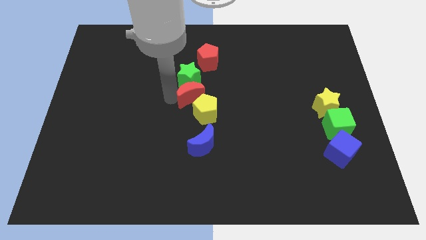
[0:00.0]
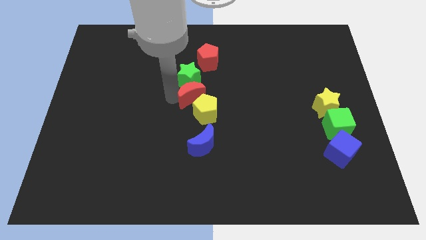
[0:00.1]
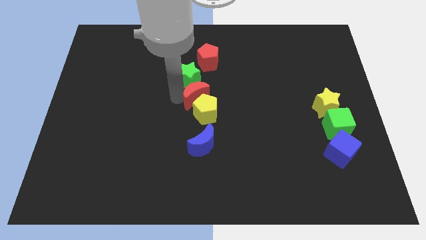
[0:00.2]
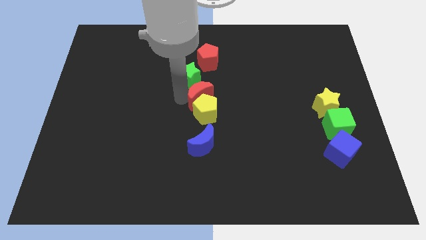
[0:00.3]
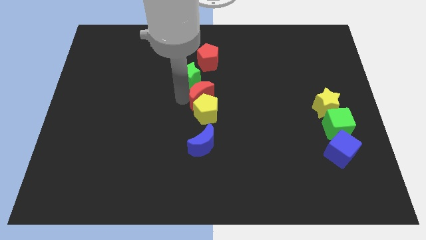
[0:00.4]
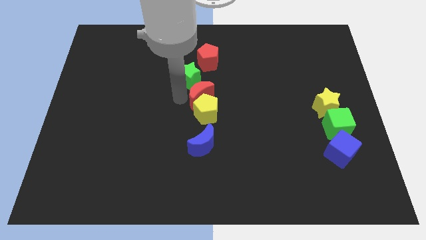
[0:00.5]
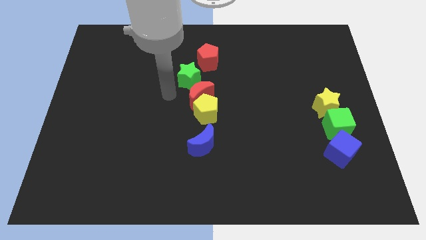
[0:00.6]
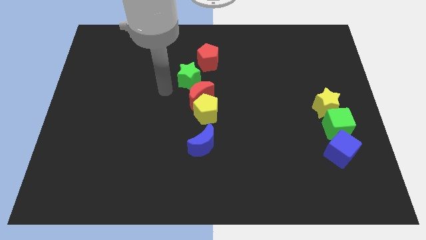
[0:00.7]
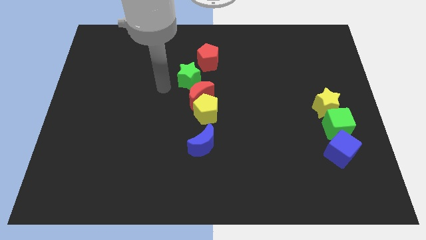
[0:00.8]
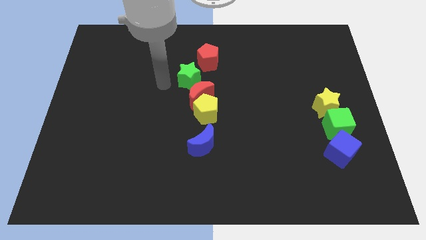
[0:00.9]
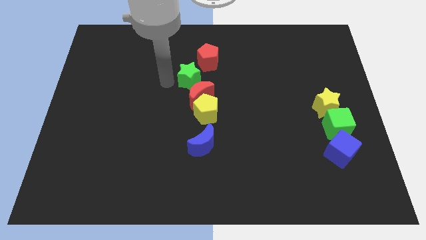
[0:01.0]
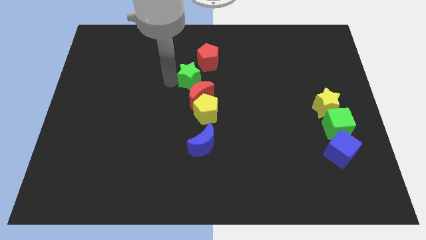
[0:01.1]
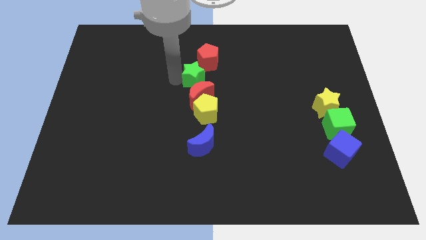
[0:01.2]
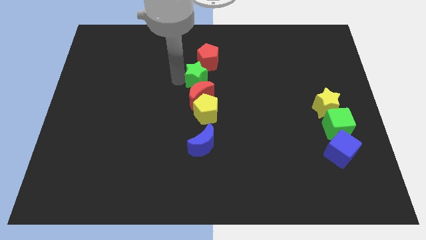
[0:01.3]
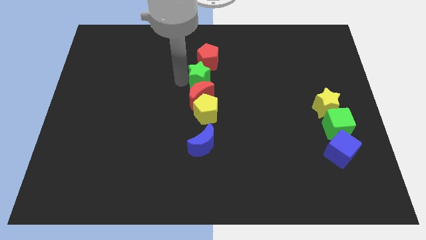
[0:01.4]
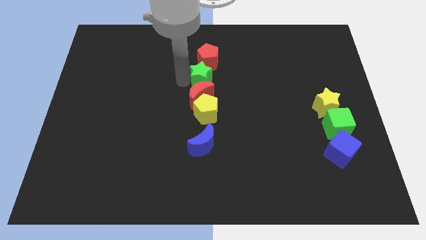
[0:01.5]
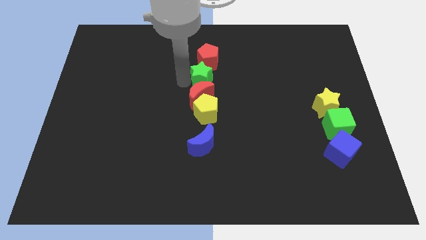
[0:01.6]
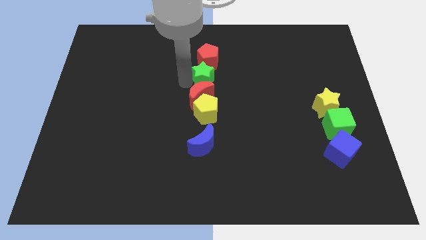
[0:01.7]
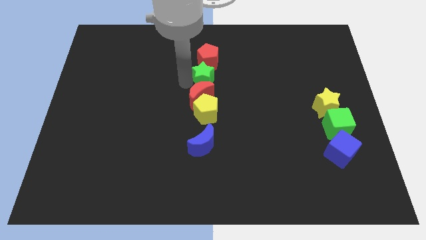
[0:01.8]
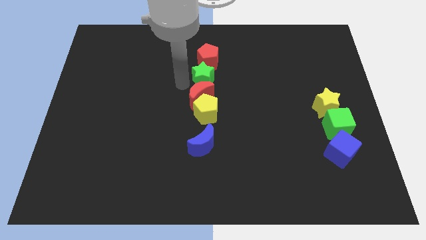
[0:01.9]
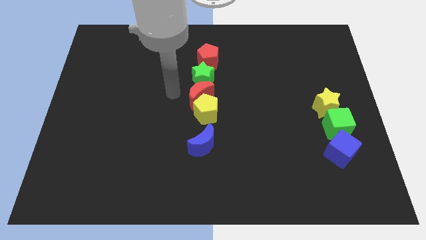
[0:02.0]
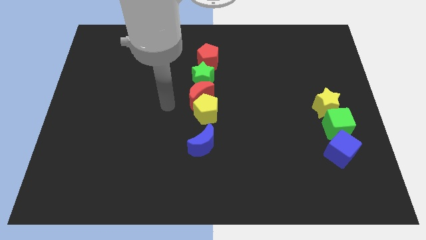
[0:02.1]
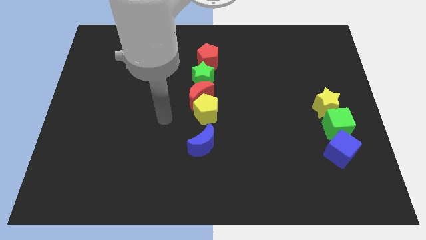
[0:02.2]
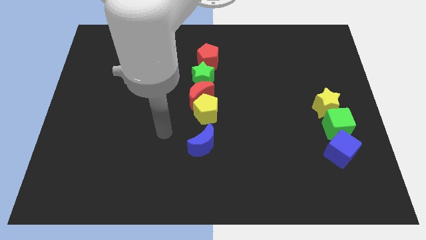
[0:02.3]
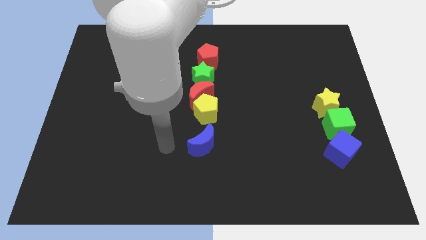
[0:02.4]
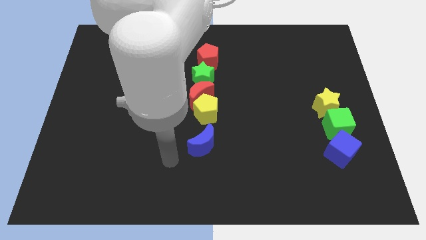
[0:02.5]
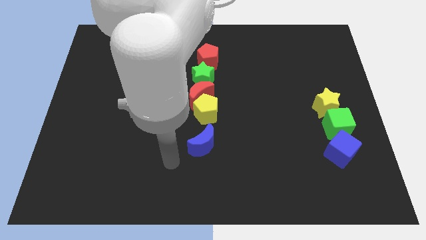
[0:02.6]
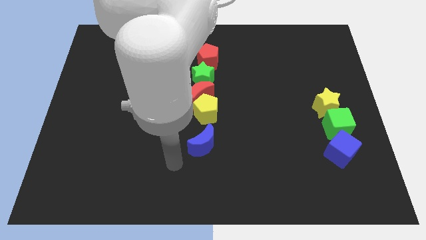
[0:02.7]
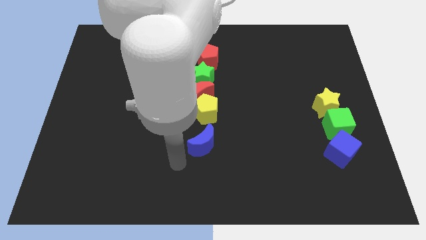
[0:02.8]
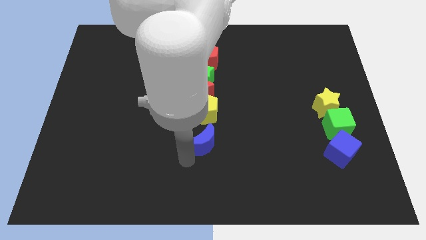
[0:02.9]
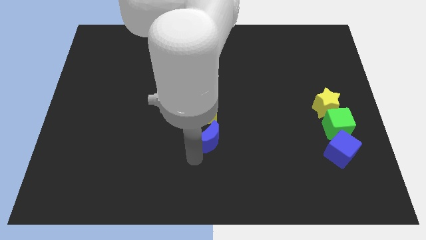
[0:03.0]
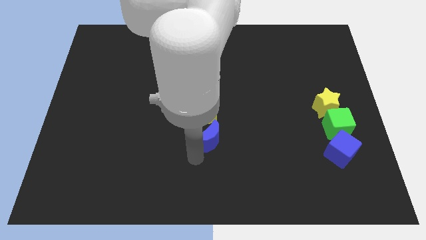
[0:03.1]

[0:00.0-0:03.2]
arrange red pentagon green stared crescent yellow pentagon and blue semicircle in a vertical line

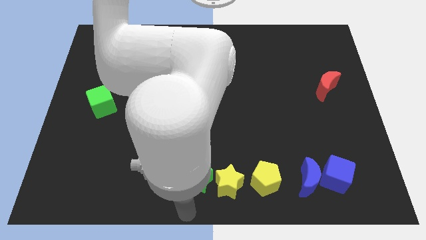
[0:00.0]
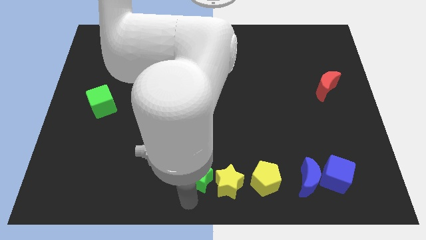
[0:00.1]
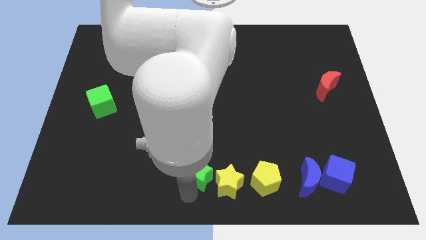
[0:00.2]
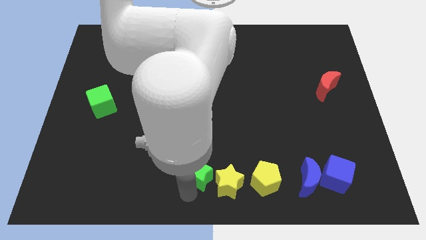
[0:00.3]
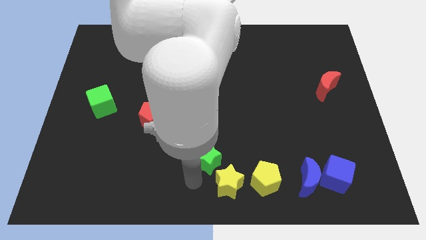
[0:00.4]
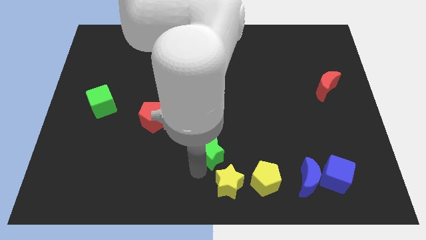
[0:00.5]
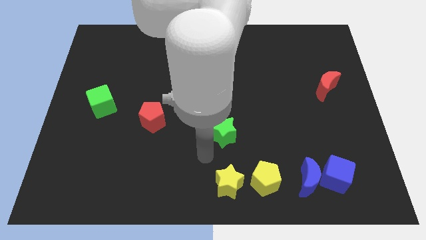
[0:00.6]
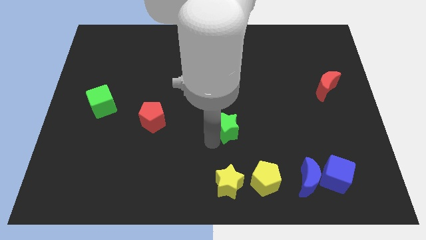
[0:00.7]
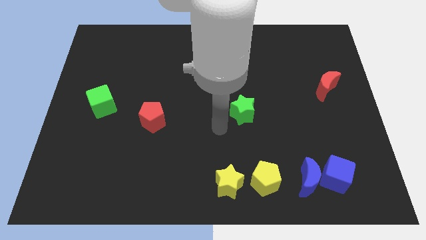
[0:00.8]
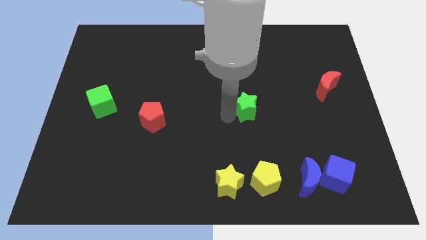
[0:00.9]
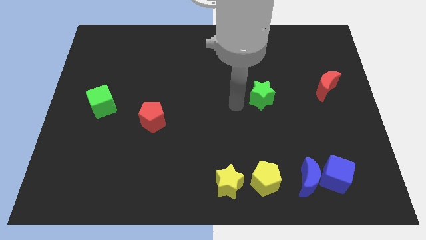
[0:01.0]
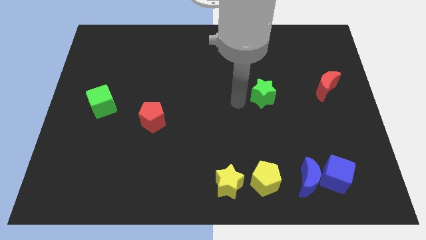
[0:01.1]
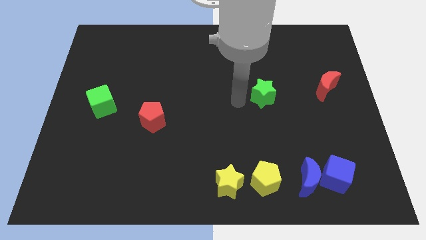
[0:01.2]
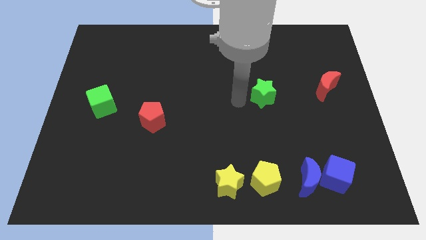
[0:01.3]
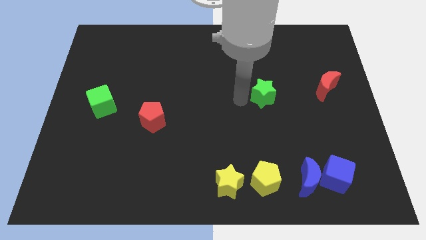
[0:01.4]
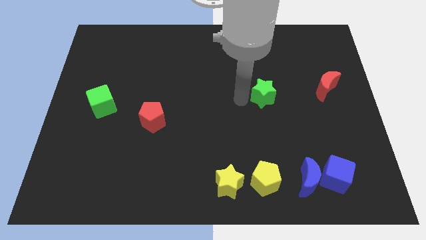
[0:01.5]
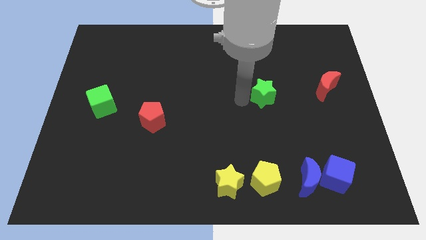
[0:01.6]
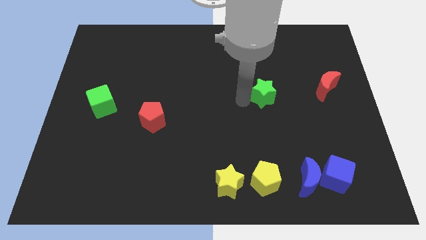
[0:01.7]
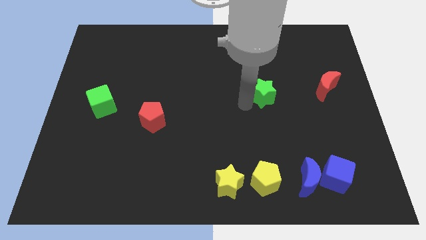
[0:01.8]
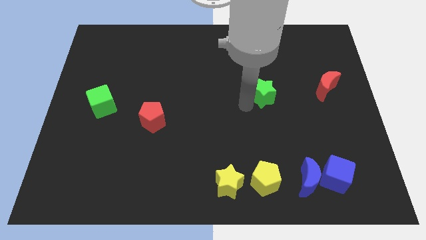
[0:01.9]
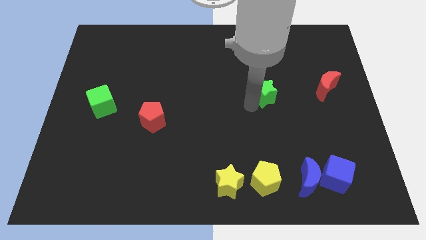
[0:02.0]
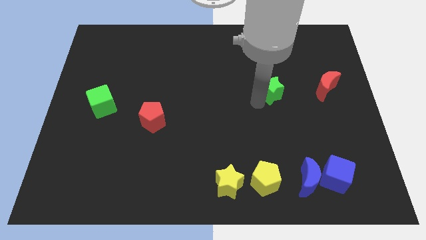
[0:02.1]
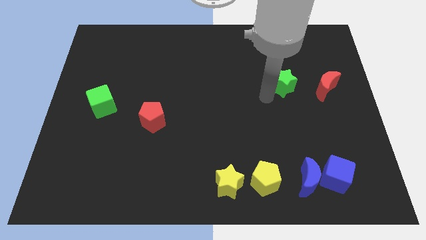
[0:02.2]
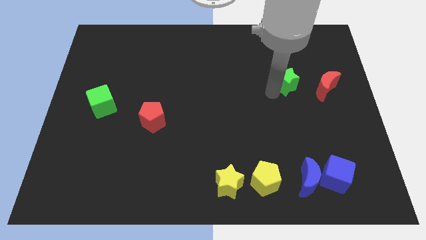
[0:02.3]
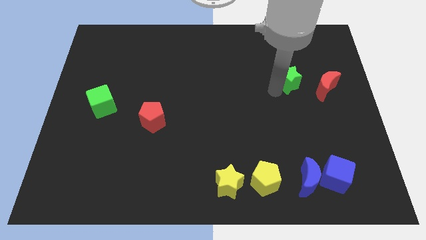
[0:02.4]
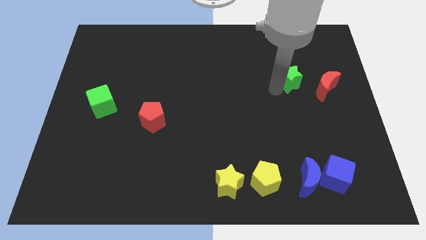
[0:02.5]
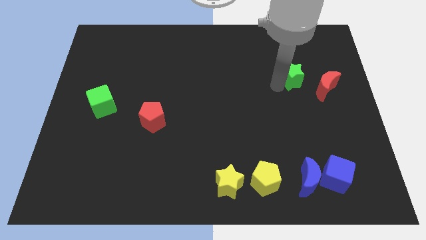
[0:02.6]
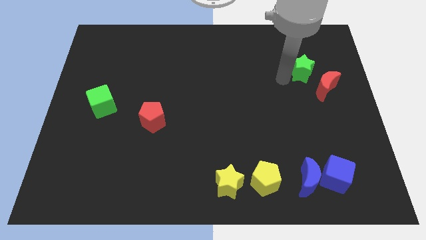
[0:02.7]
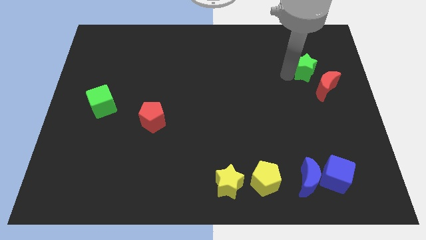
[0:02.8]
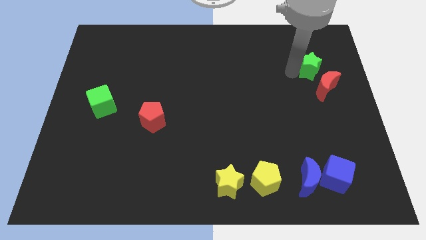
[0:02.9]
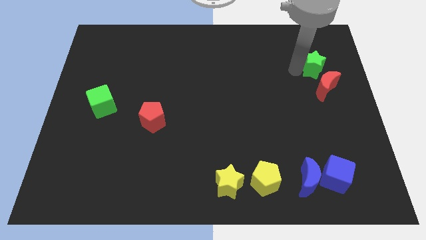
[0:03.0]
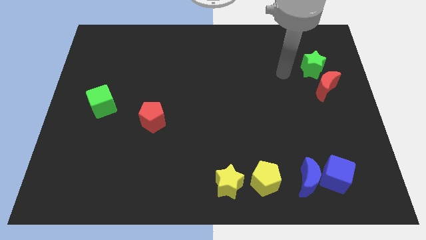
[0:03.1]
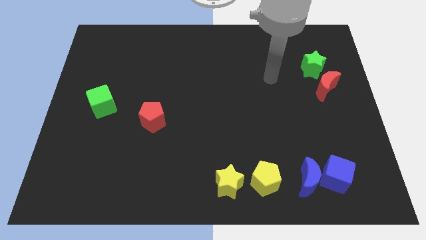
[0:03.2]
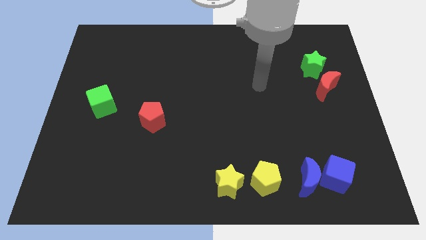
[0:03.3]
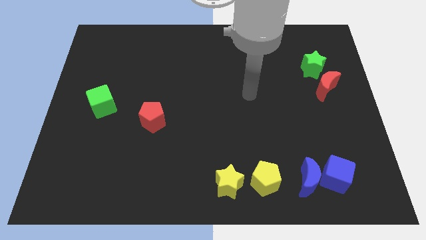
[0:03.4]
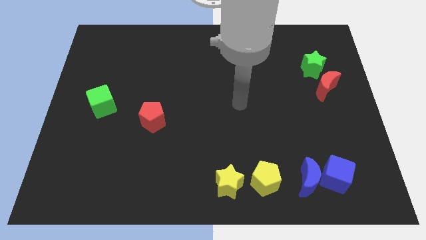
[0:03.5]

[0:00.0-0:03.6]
place green star to the top left of red moon

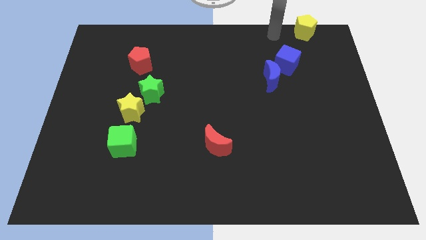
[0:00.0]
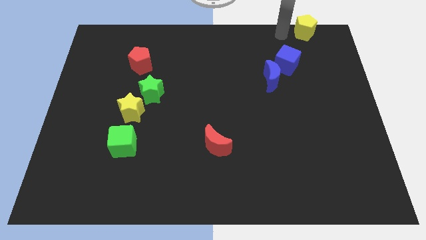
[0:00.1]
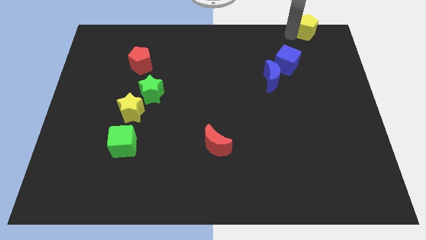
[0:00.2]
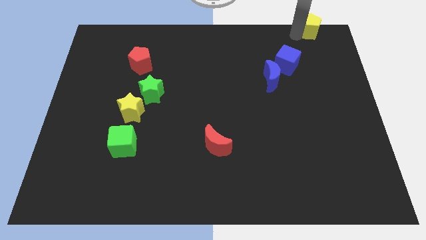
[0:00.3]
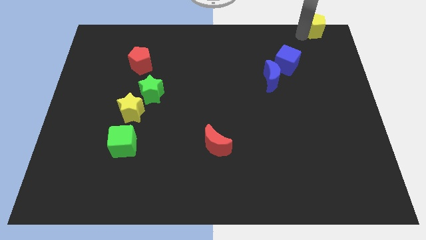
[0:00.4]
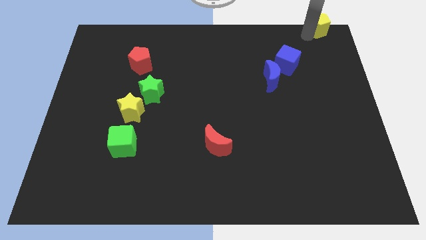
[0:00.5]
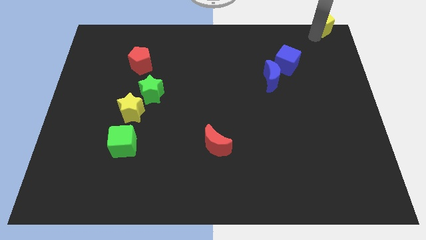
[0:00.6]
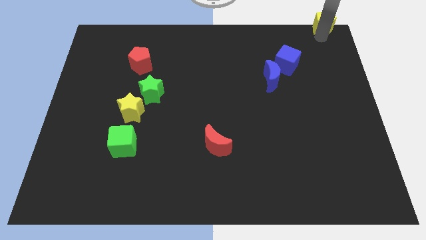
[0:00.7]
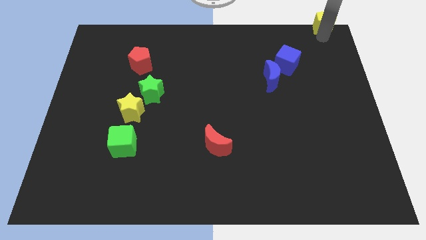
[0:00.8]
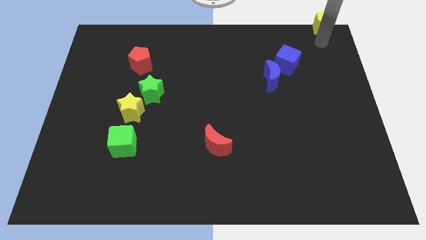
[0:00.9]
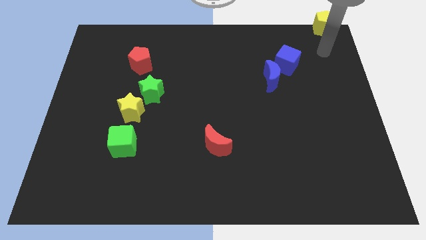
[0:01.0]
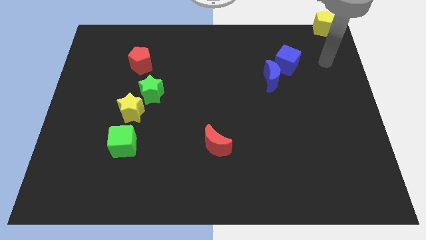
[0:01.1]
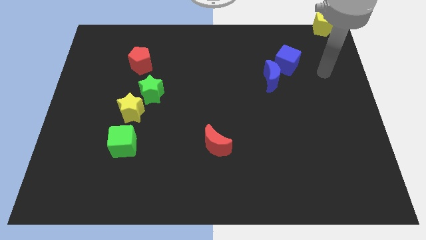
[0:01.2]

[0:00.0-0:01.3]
push the yellow pentagon to the top right corner of the board

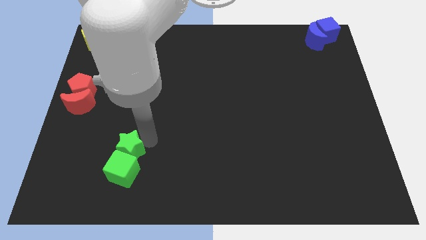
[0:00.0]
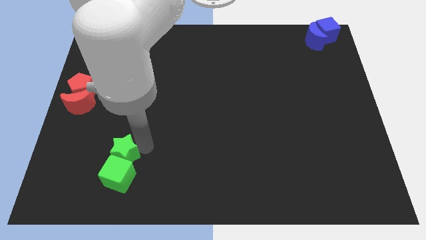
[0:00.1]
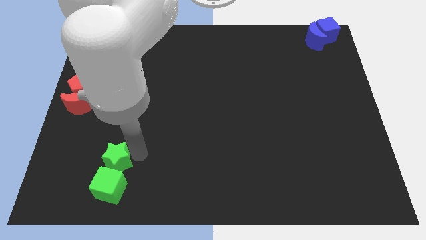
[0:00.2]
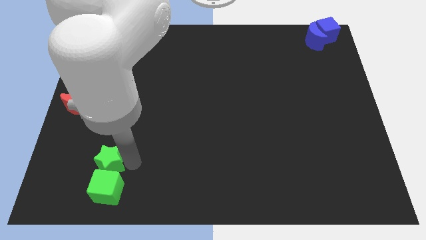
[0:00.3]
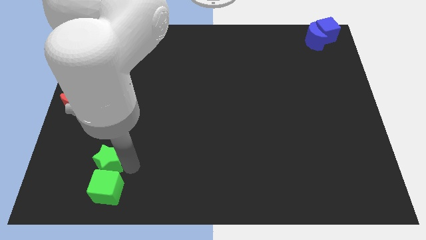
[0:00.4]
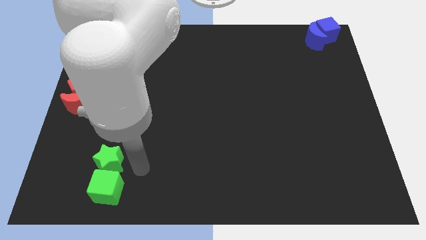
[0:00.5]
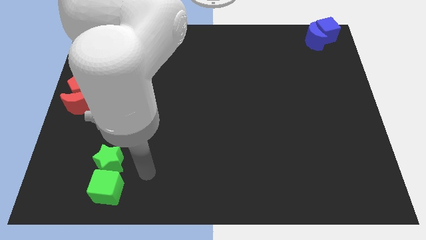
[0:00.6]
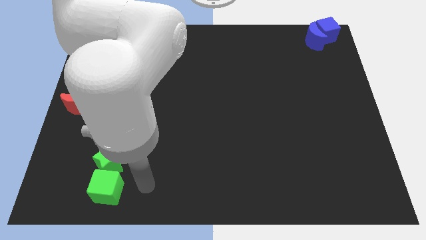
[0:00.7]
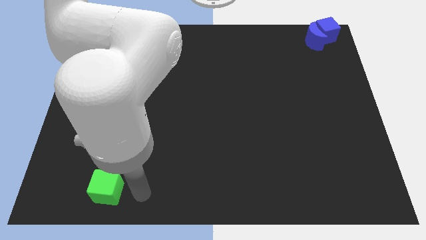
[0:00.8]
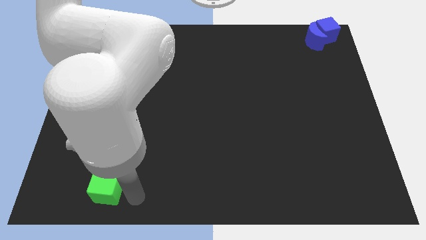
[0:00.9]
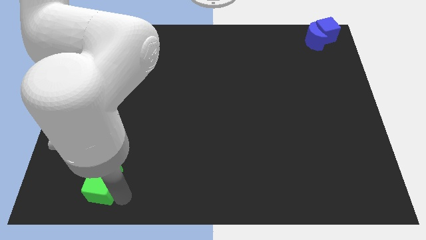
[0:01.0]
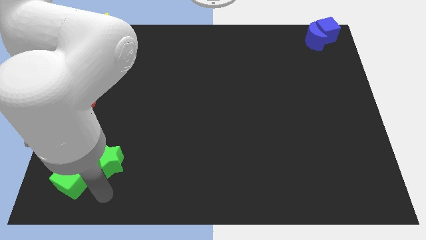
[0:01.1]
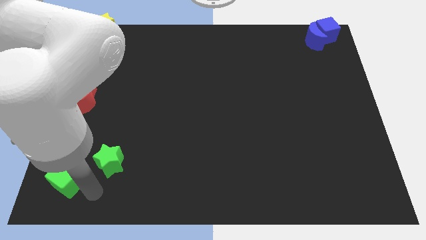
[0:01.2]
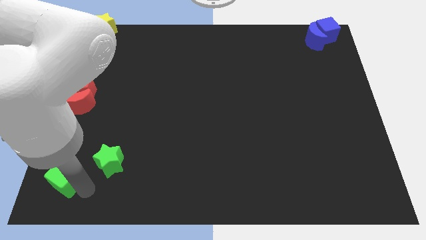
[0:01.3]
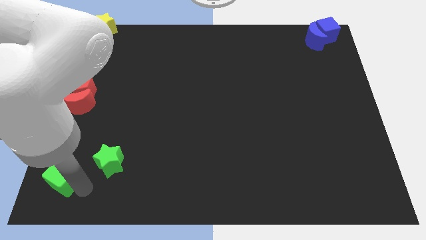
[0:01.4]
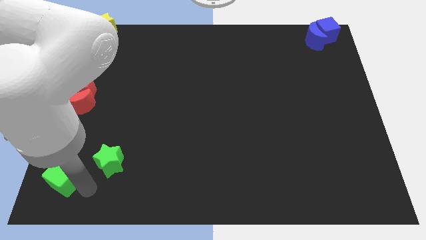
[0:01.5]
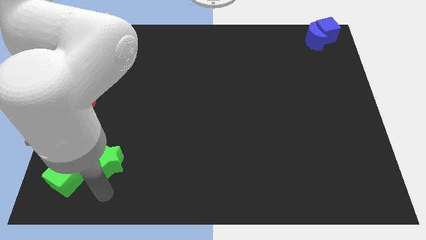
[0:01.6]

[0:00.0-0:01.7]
separate the green cube from the green star
